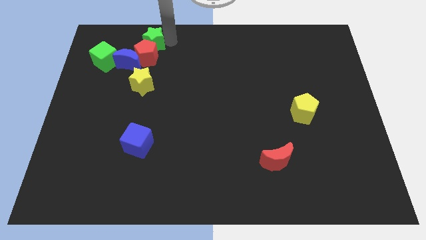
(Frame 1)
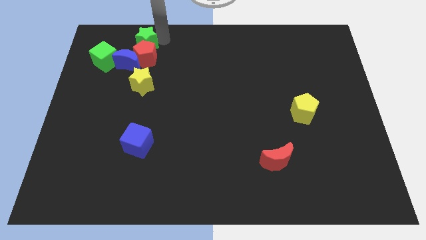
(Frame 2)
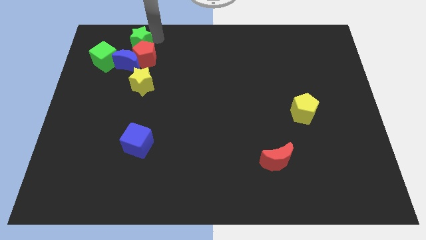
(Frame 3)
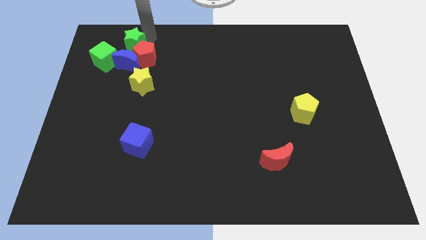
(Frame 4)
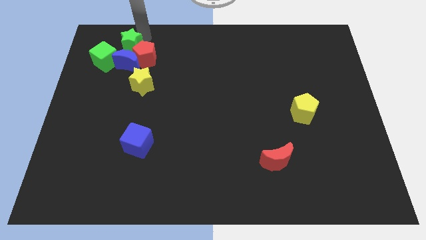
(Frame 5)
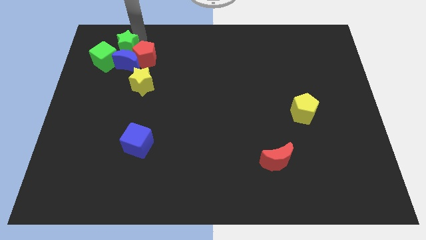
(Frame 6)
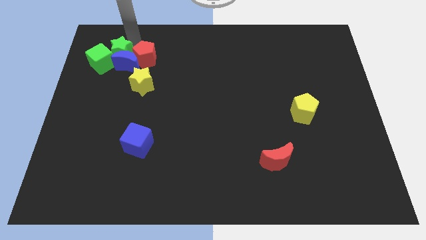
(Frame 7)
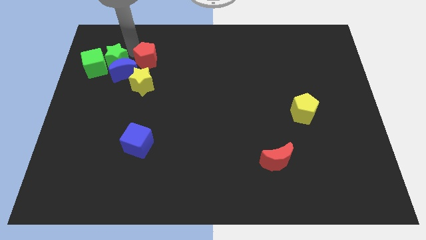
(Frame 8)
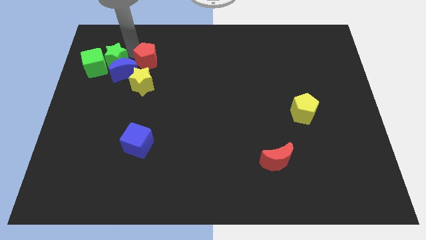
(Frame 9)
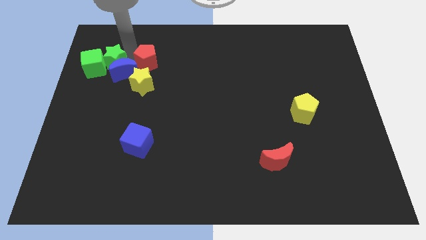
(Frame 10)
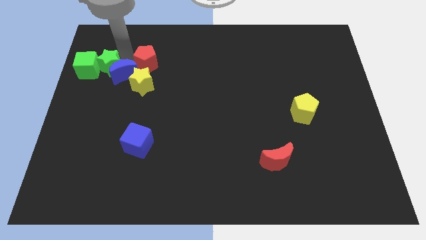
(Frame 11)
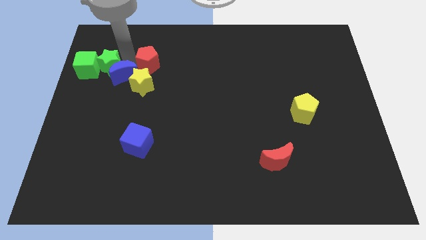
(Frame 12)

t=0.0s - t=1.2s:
push the green star into the green cube

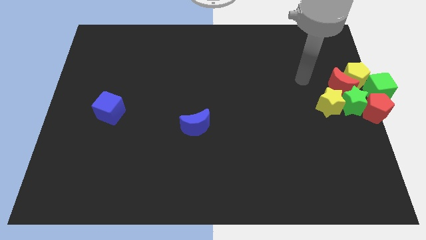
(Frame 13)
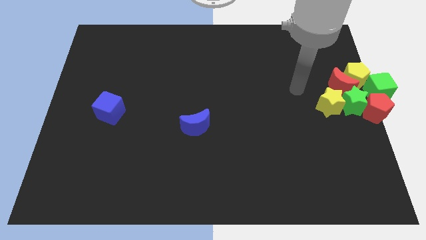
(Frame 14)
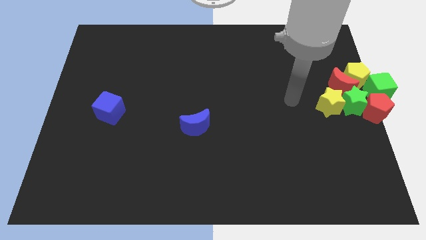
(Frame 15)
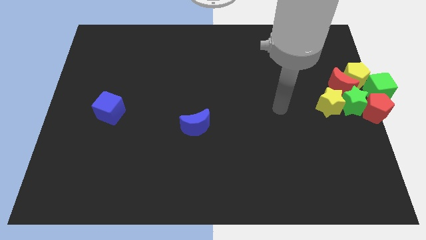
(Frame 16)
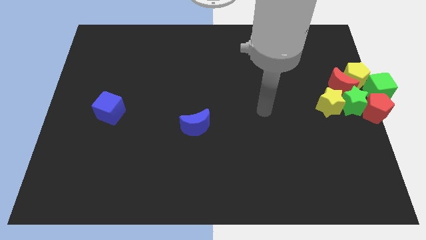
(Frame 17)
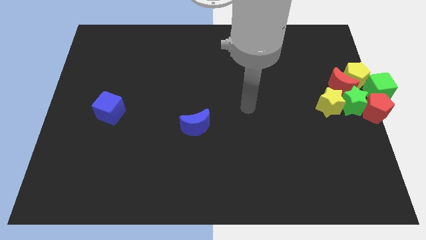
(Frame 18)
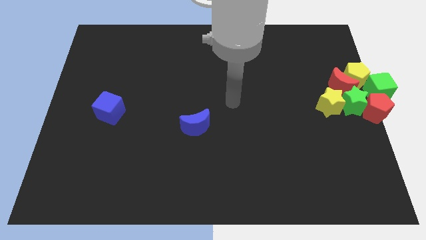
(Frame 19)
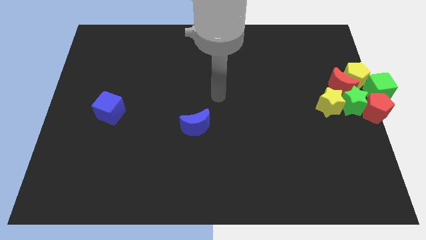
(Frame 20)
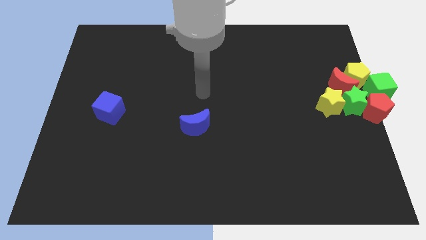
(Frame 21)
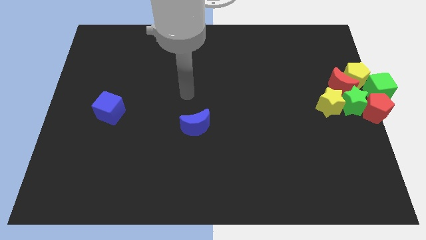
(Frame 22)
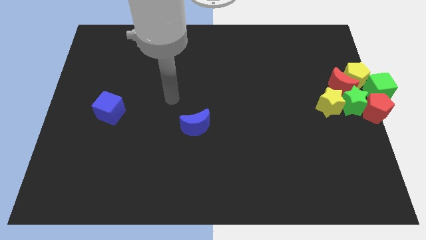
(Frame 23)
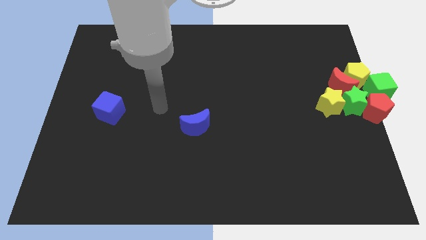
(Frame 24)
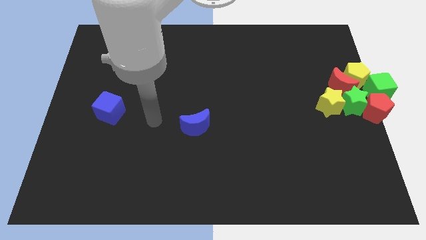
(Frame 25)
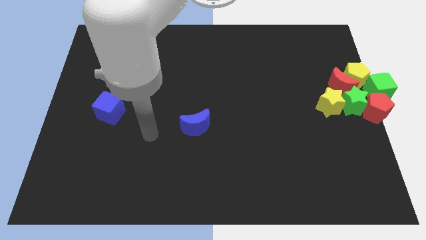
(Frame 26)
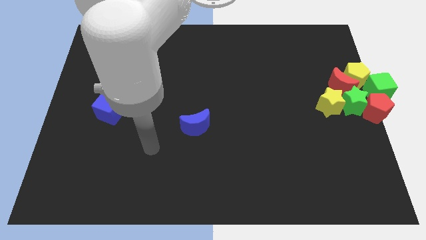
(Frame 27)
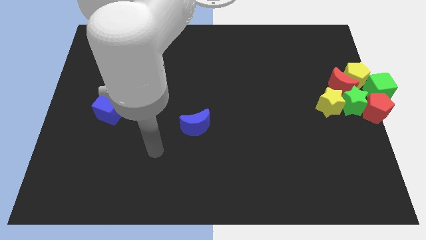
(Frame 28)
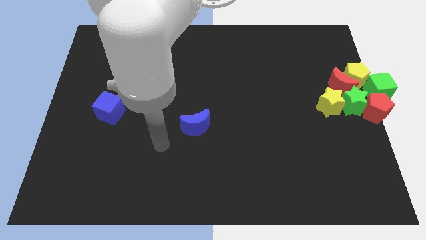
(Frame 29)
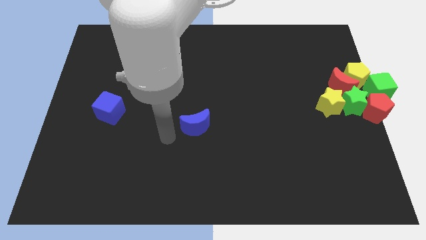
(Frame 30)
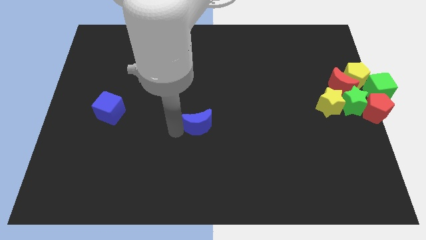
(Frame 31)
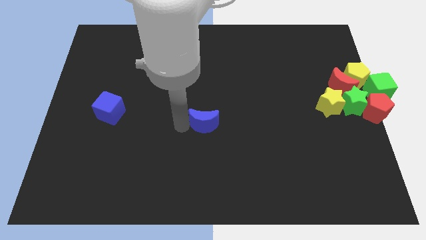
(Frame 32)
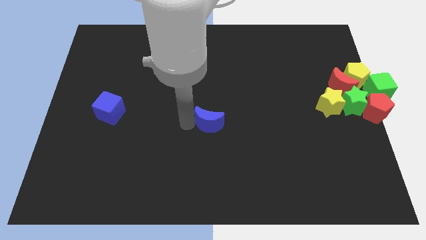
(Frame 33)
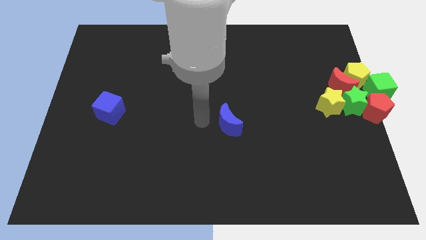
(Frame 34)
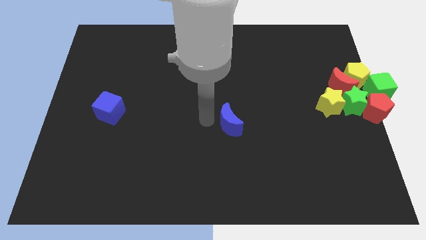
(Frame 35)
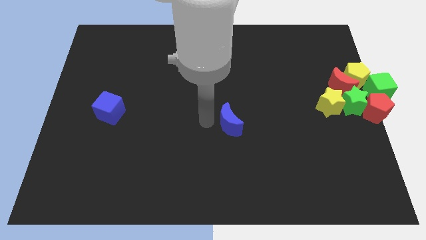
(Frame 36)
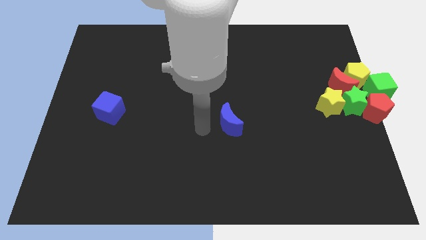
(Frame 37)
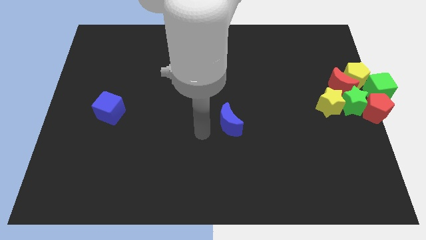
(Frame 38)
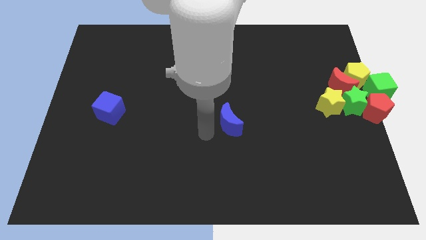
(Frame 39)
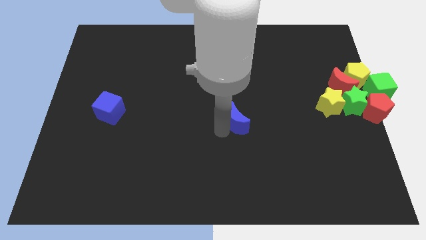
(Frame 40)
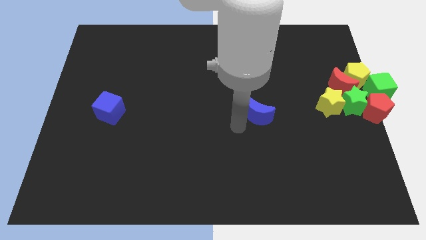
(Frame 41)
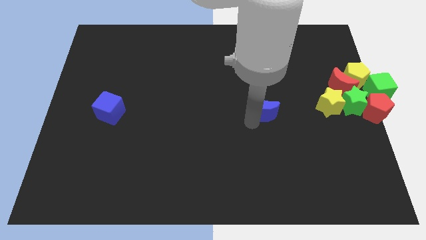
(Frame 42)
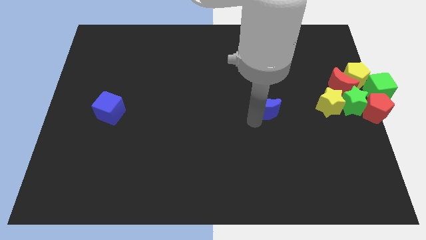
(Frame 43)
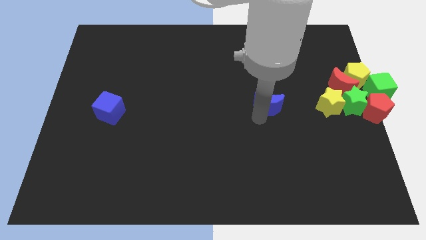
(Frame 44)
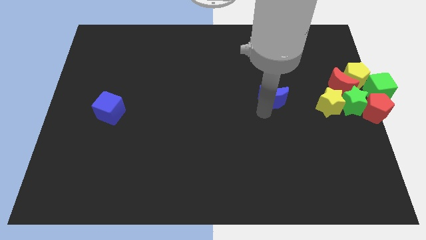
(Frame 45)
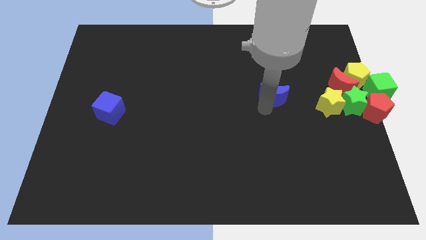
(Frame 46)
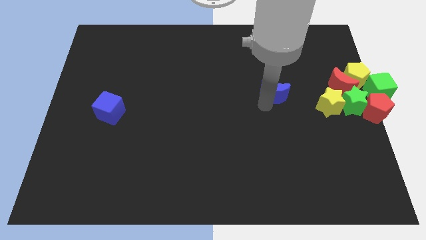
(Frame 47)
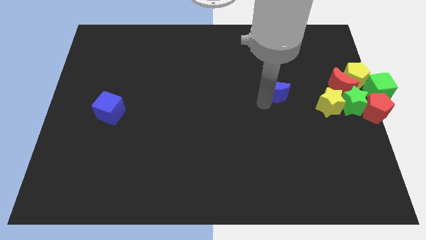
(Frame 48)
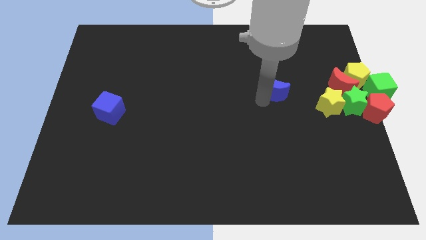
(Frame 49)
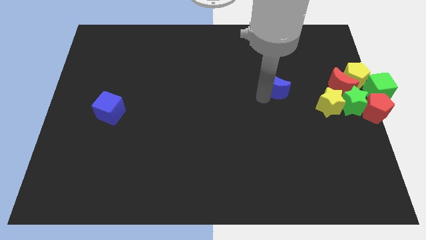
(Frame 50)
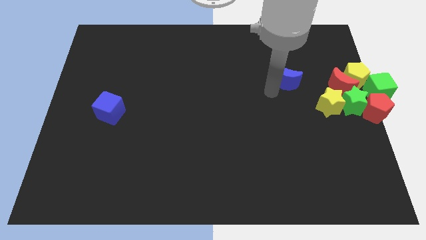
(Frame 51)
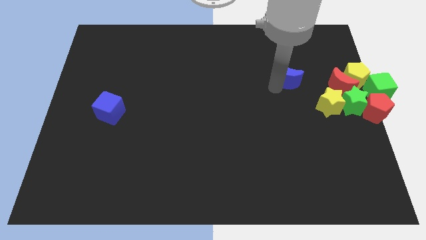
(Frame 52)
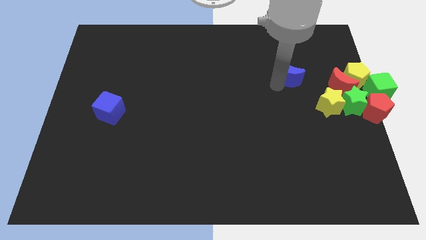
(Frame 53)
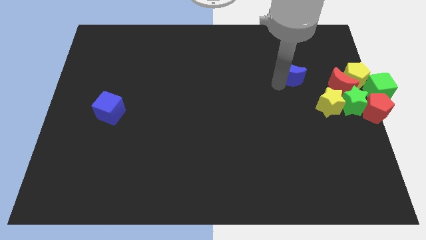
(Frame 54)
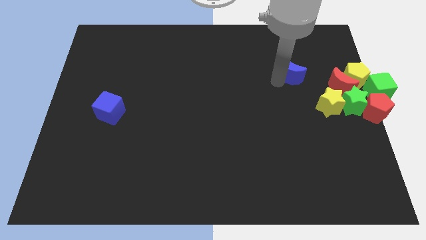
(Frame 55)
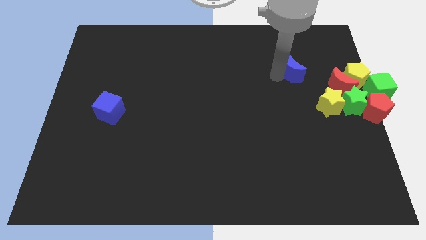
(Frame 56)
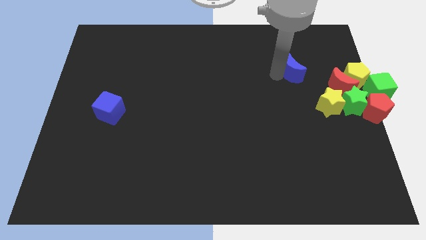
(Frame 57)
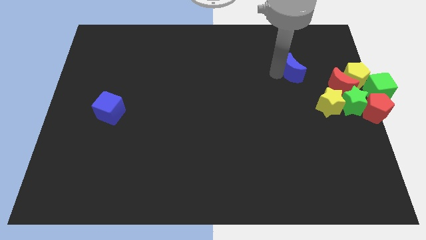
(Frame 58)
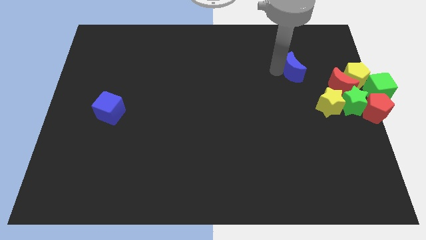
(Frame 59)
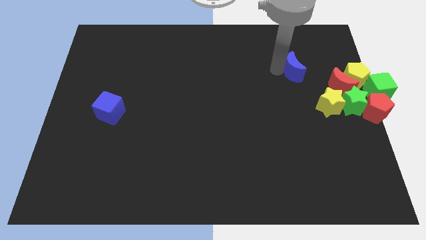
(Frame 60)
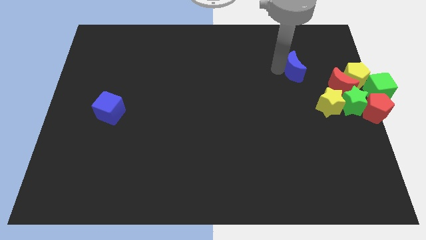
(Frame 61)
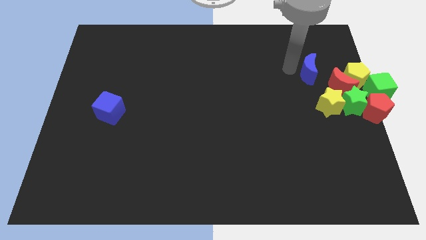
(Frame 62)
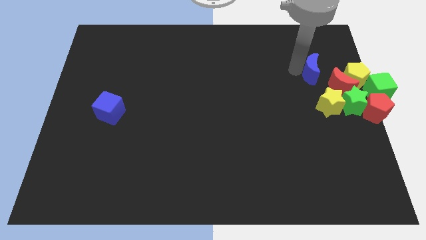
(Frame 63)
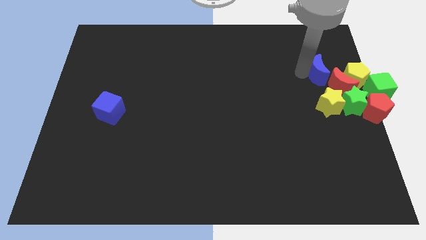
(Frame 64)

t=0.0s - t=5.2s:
place the blue moon to the top left of red moon

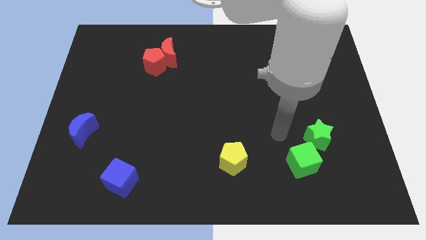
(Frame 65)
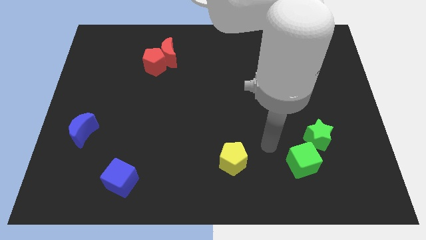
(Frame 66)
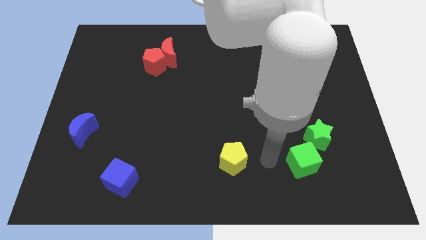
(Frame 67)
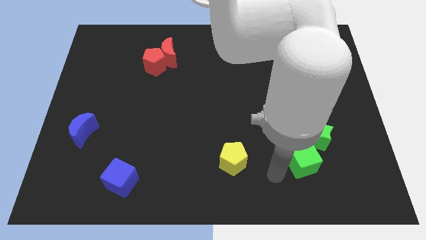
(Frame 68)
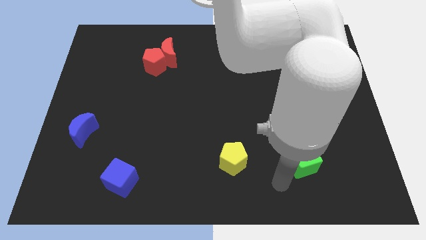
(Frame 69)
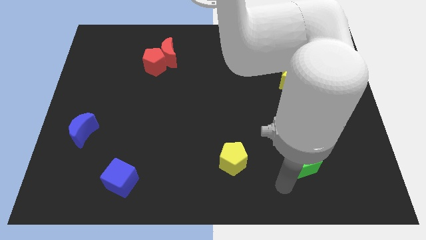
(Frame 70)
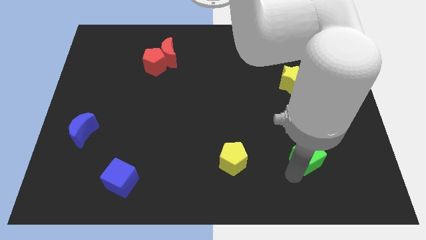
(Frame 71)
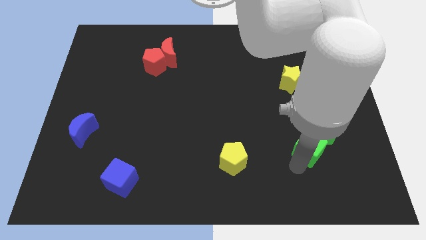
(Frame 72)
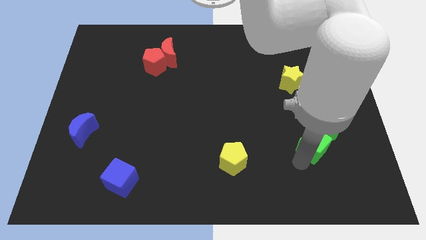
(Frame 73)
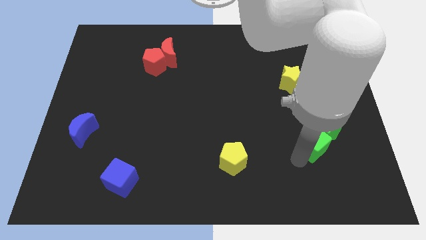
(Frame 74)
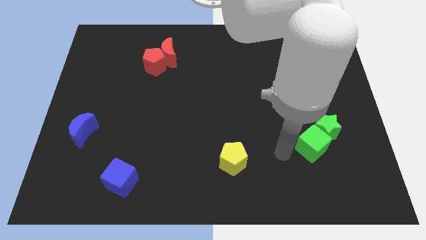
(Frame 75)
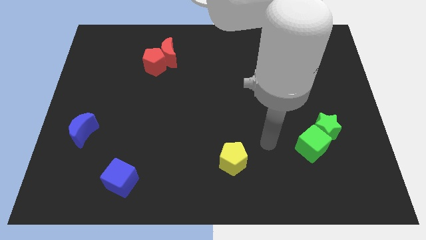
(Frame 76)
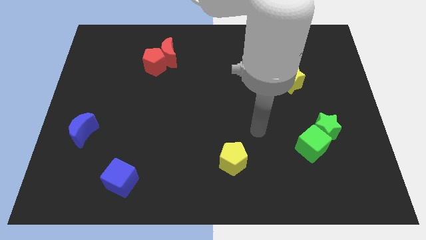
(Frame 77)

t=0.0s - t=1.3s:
move the green cube into the green star

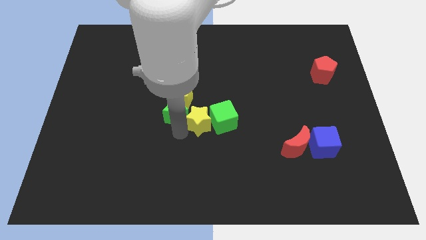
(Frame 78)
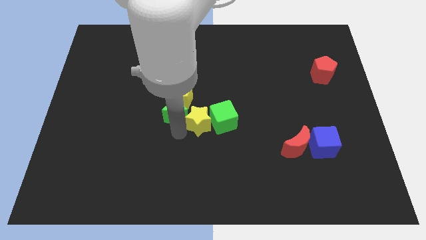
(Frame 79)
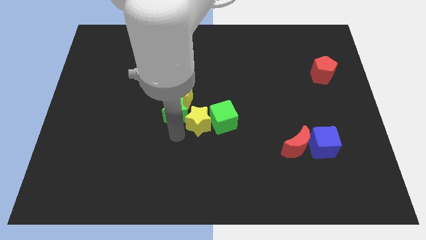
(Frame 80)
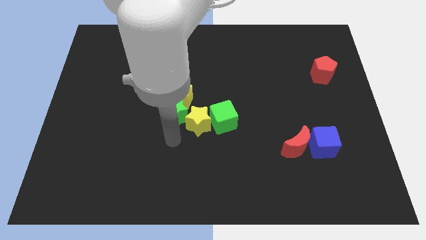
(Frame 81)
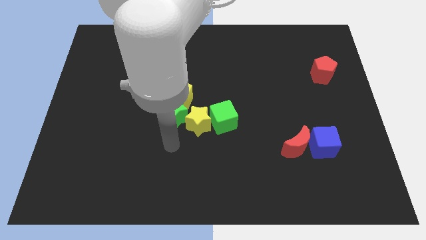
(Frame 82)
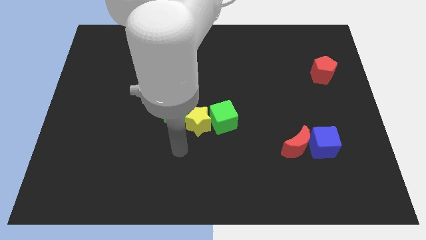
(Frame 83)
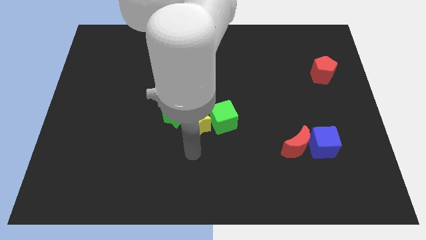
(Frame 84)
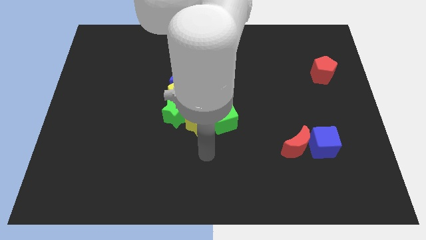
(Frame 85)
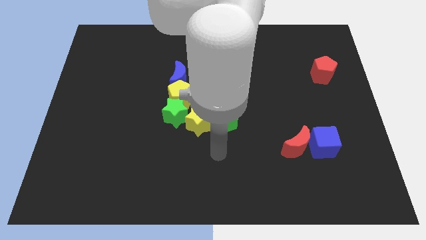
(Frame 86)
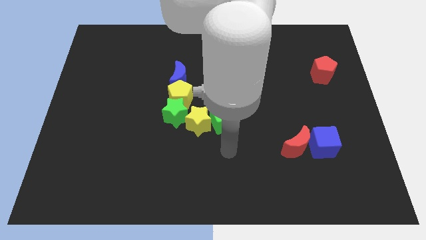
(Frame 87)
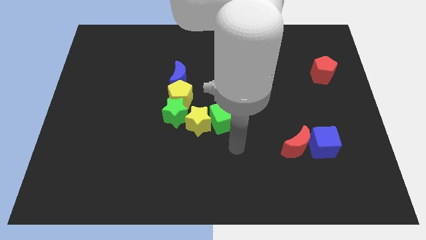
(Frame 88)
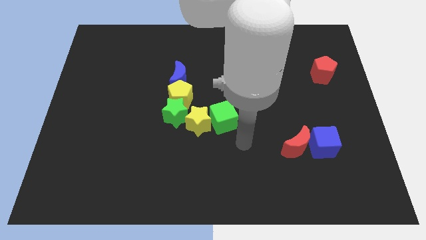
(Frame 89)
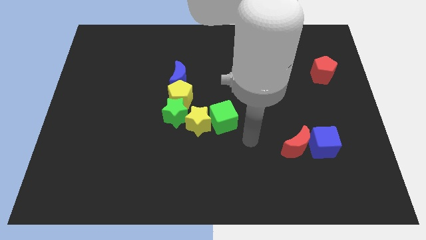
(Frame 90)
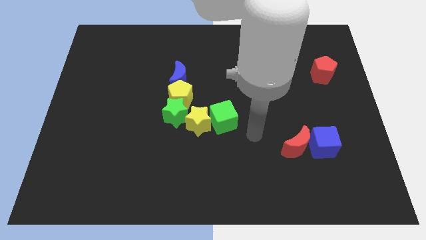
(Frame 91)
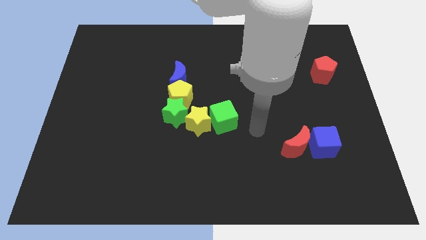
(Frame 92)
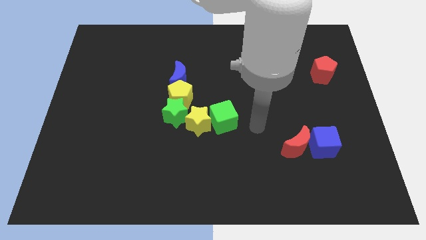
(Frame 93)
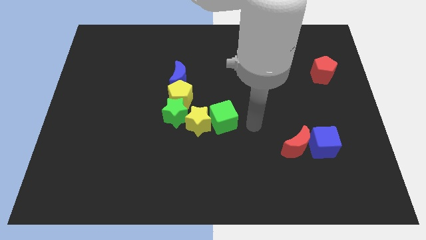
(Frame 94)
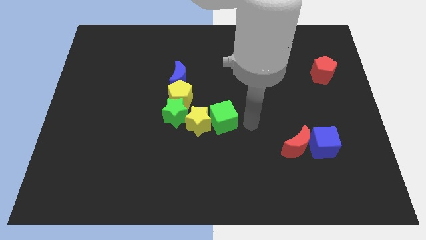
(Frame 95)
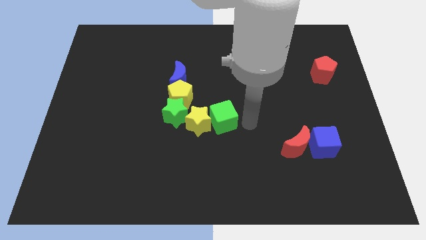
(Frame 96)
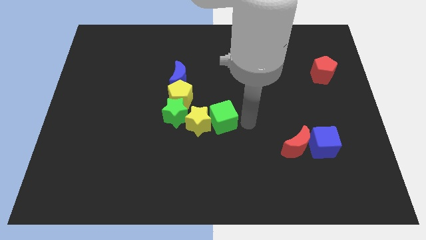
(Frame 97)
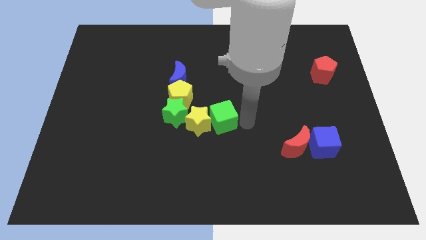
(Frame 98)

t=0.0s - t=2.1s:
move your arm to the right of the green cube
